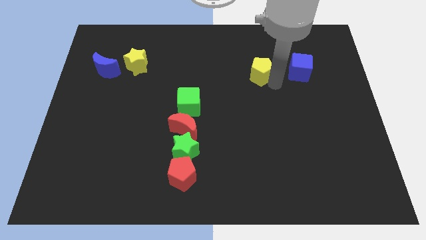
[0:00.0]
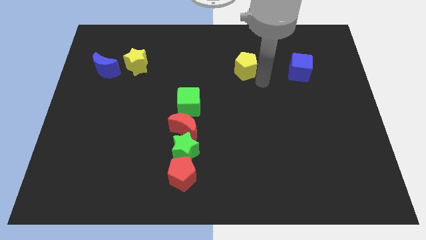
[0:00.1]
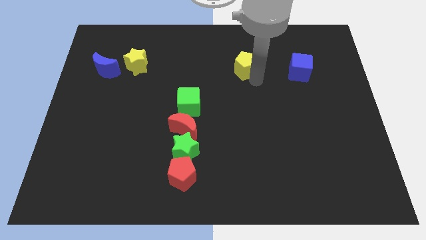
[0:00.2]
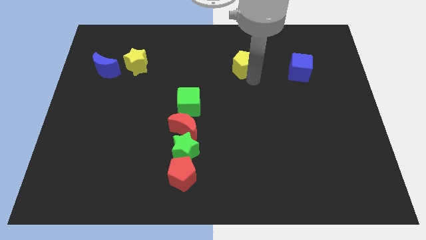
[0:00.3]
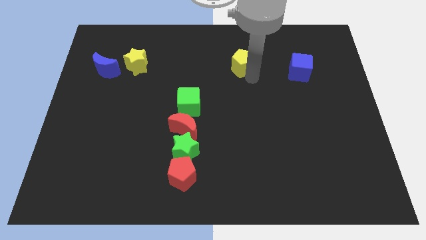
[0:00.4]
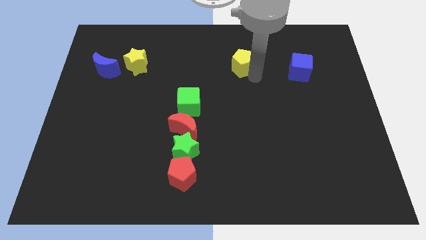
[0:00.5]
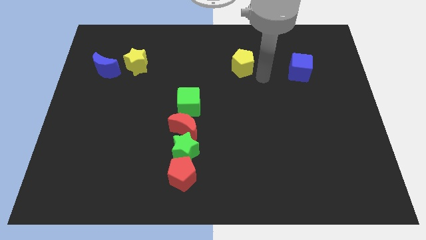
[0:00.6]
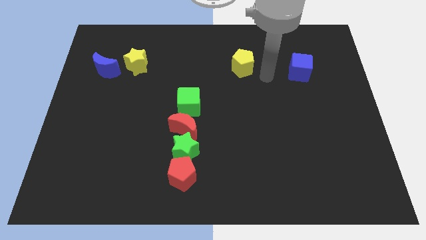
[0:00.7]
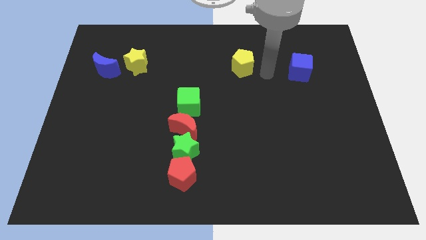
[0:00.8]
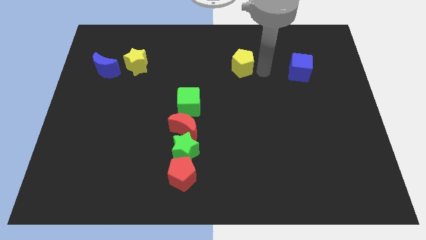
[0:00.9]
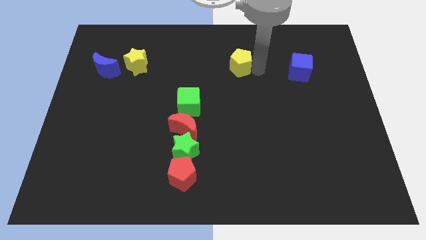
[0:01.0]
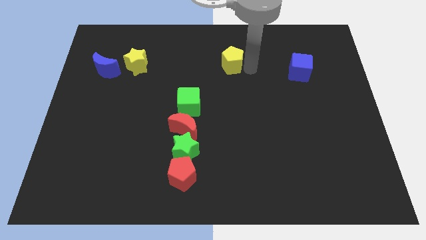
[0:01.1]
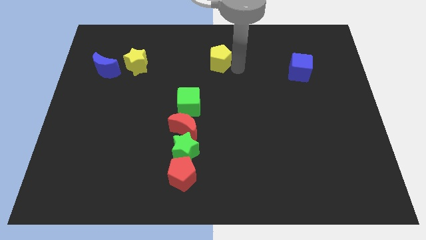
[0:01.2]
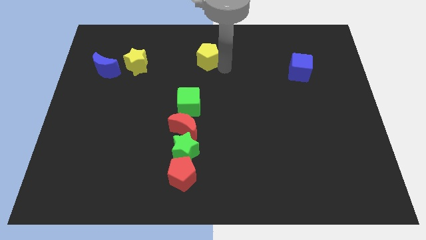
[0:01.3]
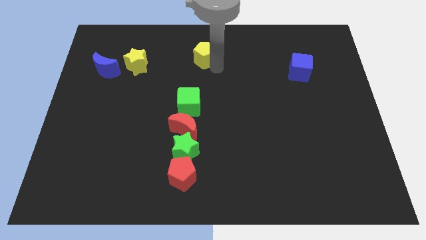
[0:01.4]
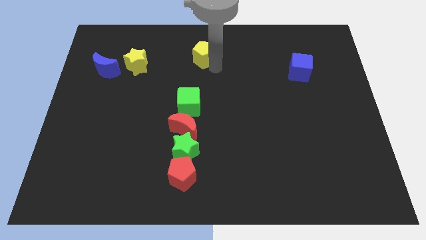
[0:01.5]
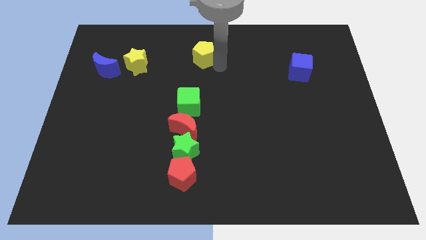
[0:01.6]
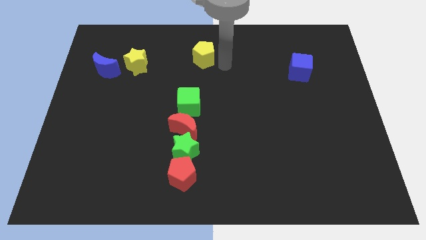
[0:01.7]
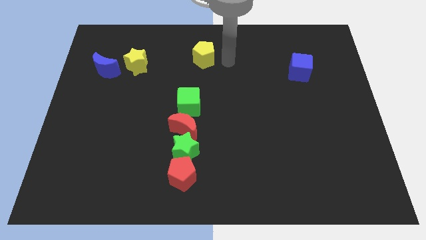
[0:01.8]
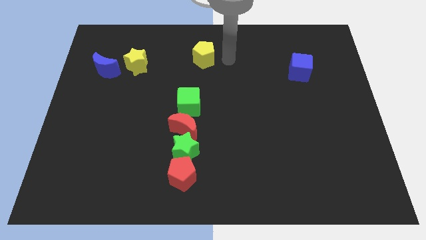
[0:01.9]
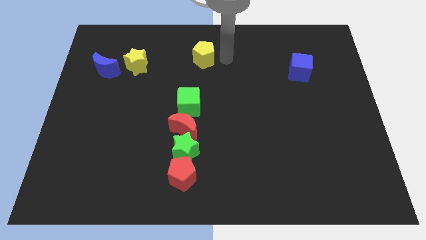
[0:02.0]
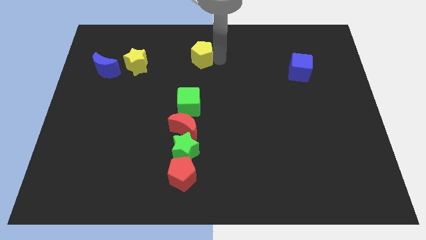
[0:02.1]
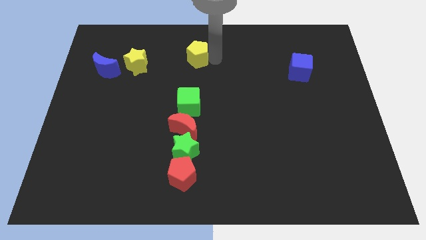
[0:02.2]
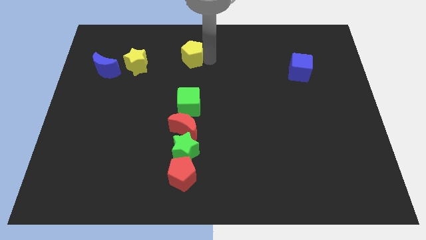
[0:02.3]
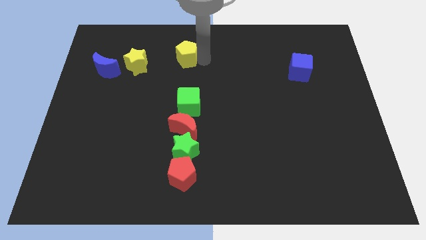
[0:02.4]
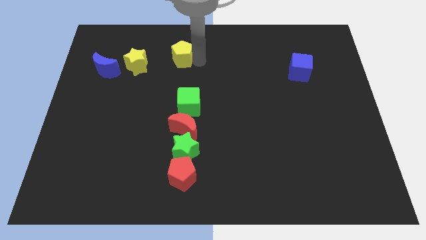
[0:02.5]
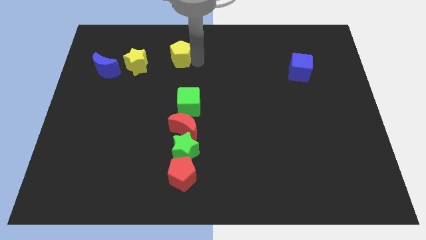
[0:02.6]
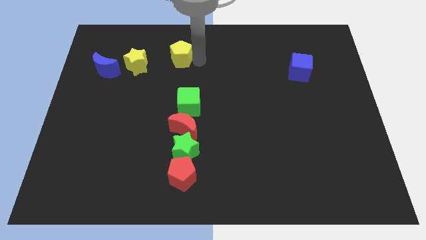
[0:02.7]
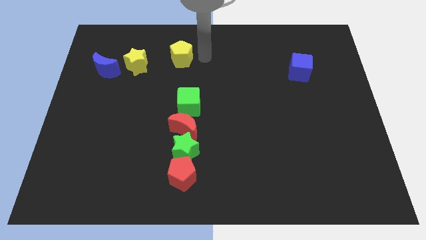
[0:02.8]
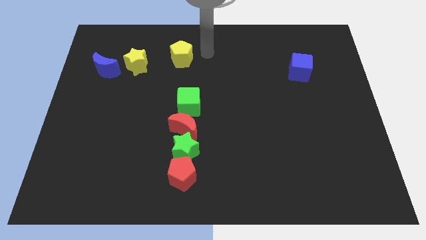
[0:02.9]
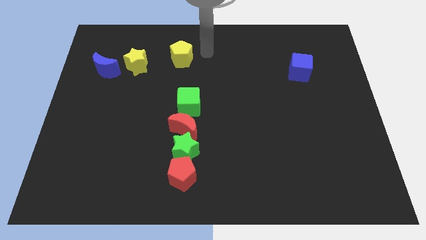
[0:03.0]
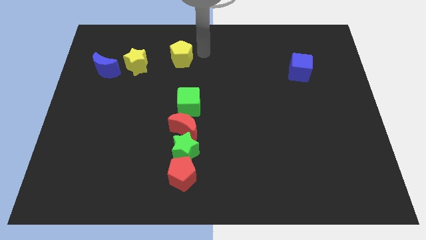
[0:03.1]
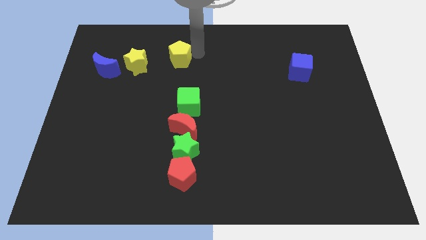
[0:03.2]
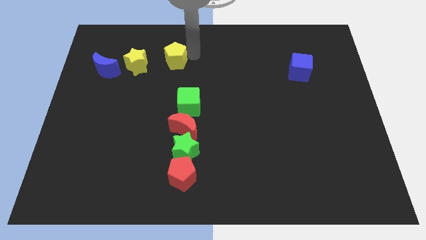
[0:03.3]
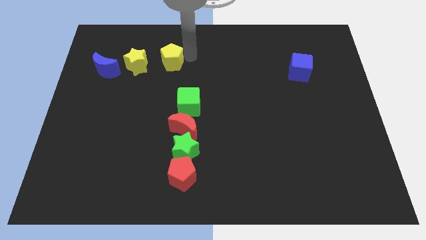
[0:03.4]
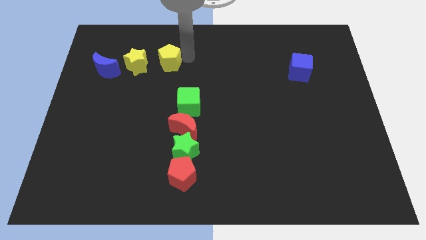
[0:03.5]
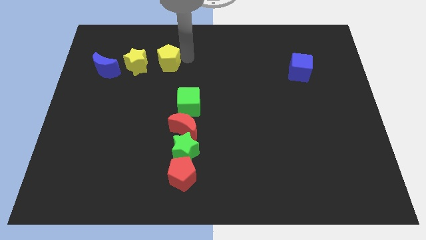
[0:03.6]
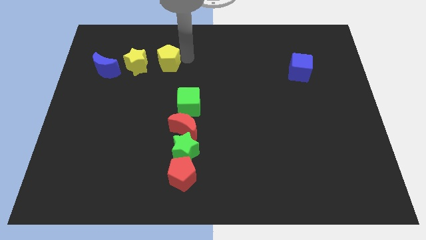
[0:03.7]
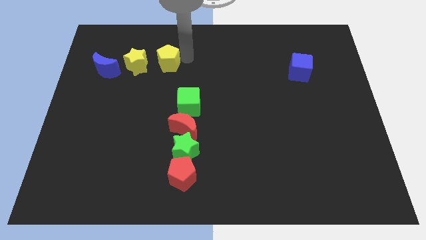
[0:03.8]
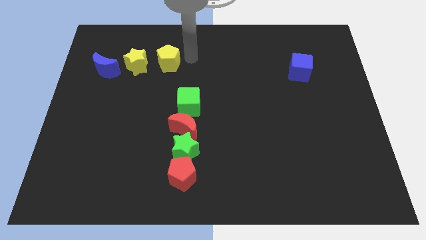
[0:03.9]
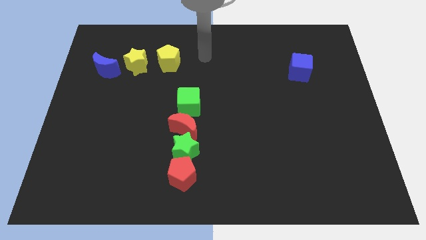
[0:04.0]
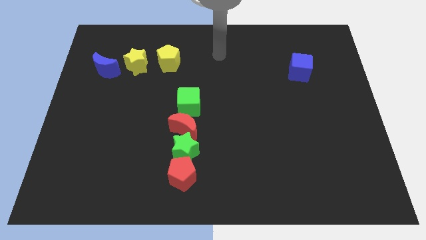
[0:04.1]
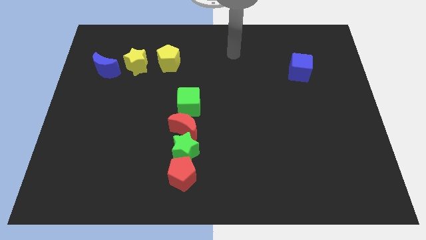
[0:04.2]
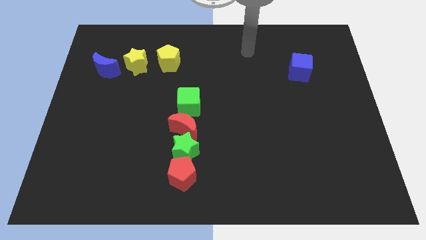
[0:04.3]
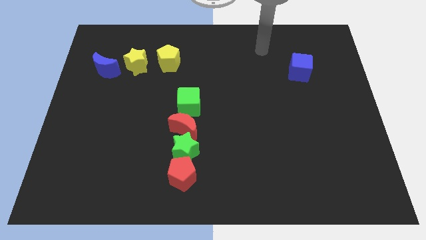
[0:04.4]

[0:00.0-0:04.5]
move yellow pentagon to the right of yellow star

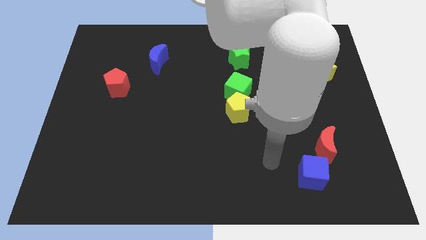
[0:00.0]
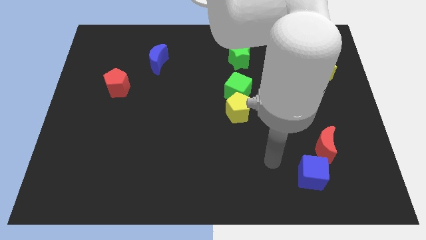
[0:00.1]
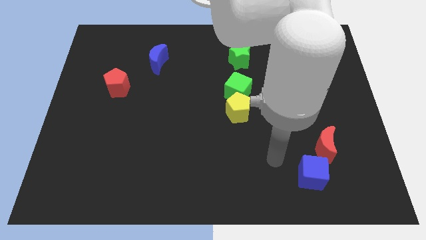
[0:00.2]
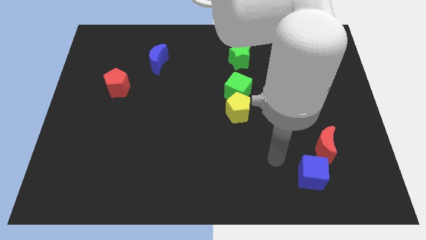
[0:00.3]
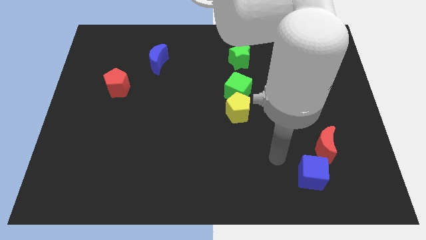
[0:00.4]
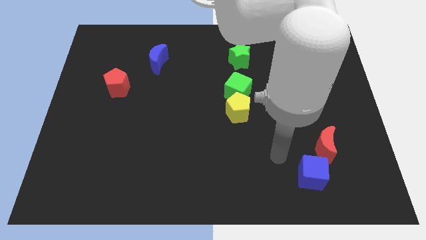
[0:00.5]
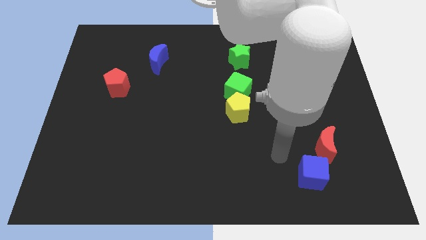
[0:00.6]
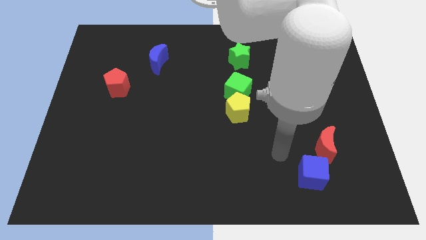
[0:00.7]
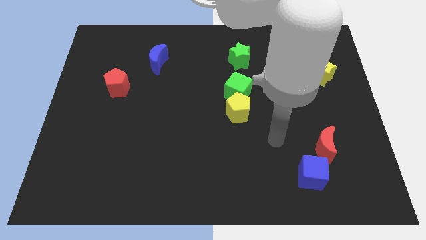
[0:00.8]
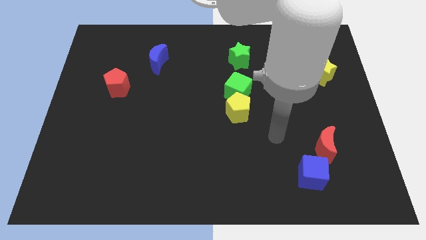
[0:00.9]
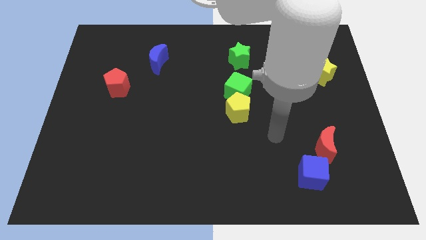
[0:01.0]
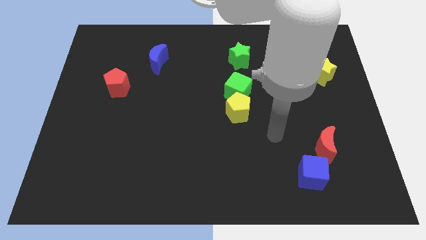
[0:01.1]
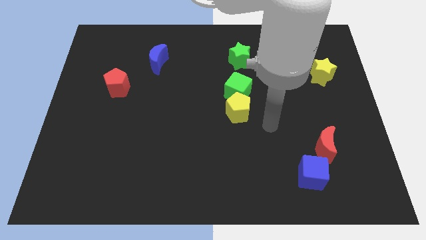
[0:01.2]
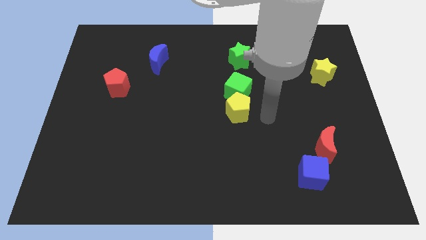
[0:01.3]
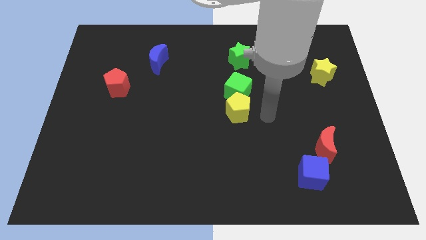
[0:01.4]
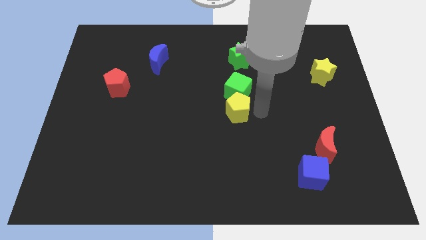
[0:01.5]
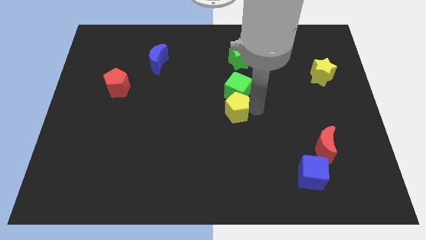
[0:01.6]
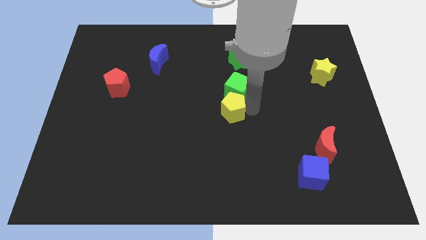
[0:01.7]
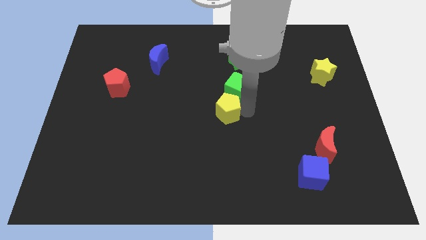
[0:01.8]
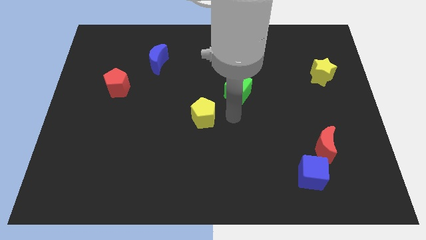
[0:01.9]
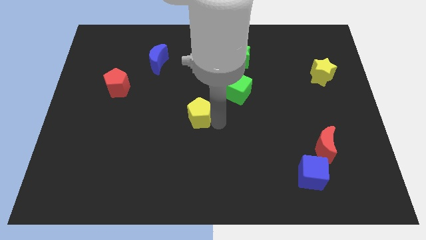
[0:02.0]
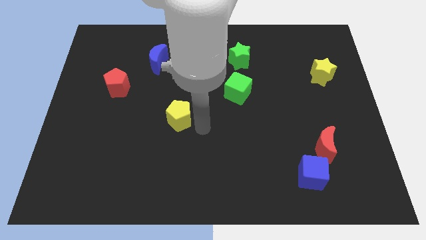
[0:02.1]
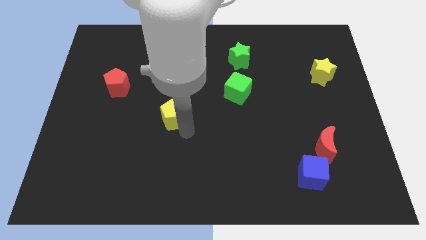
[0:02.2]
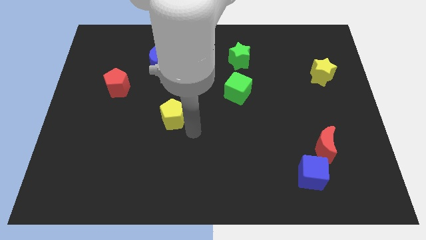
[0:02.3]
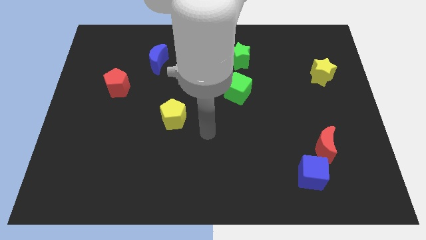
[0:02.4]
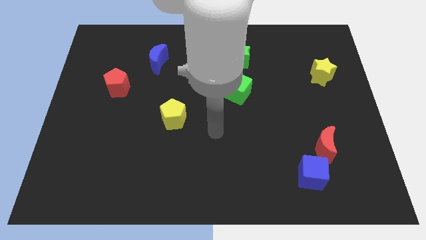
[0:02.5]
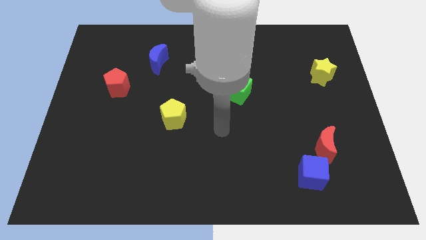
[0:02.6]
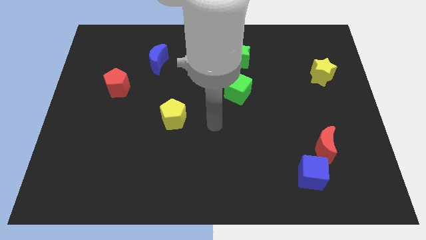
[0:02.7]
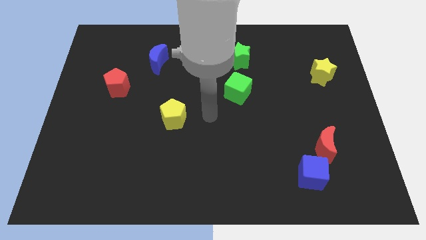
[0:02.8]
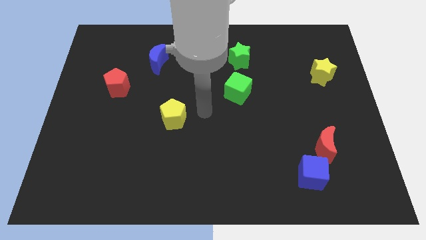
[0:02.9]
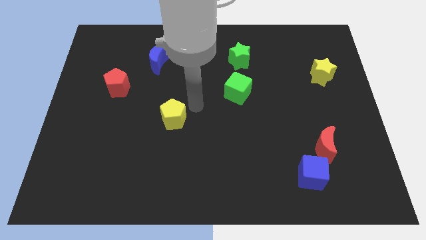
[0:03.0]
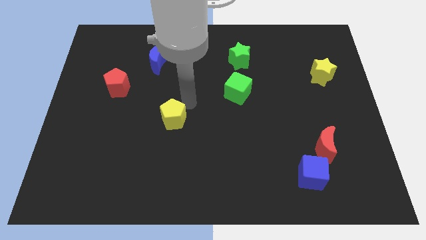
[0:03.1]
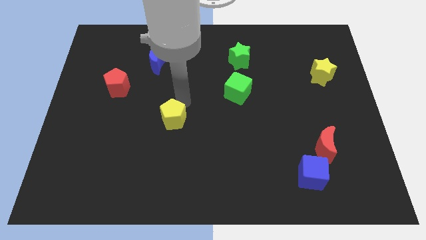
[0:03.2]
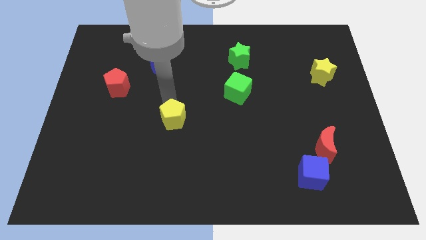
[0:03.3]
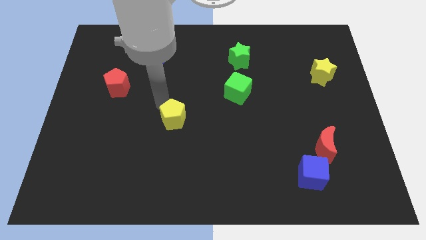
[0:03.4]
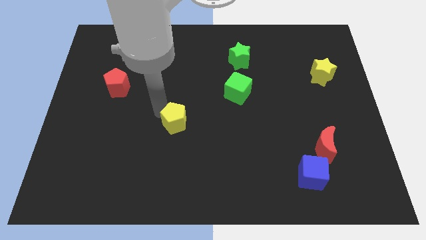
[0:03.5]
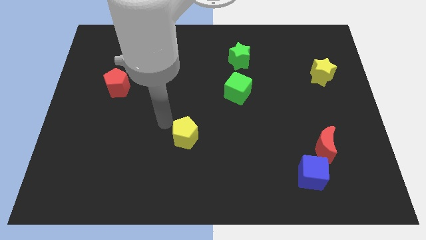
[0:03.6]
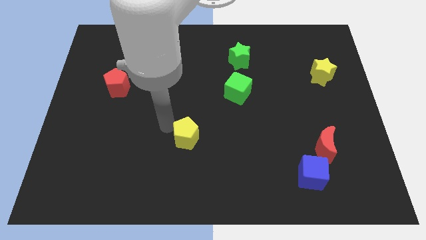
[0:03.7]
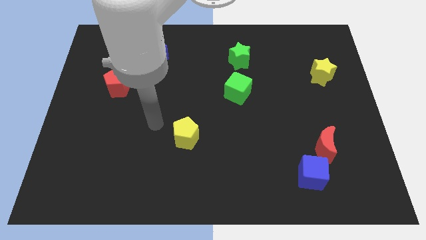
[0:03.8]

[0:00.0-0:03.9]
move the yellow pentagon diagonally to the bottom right of the red pentagon

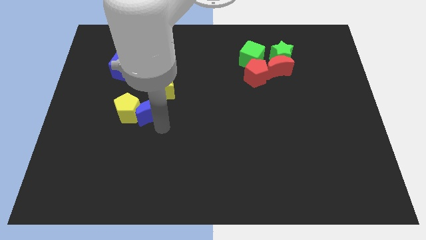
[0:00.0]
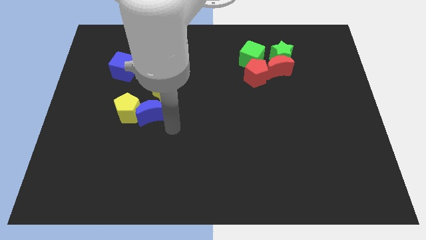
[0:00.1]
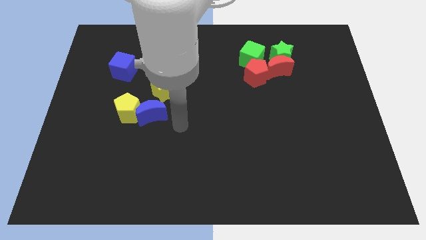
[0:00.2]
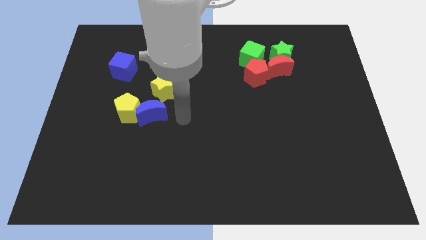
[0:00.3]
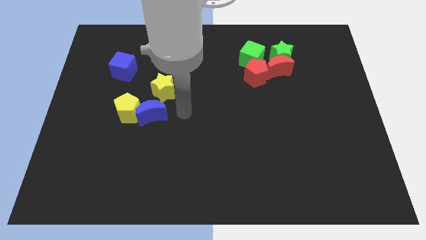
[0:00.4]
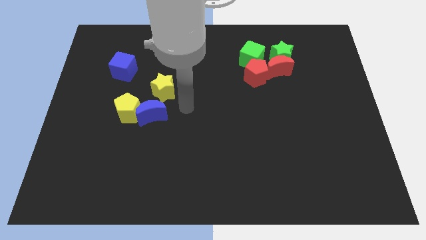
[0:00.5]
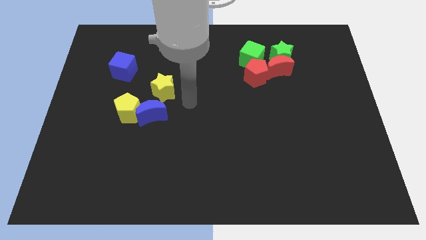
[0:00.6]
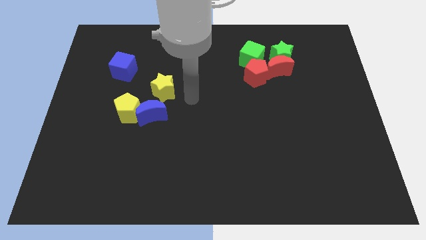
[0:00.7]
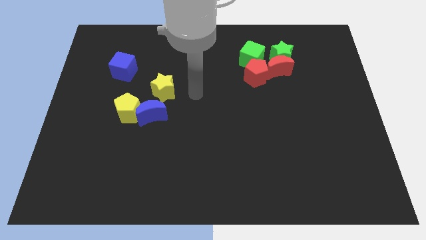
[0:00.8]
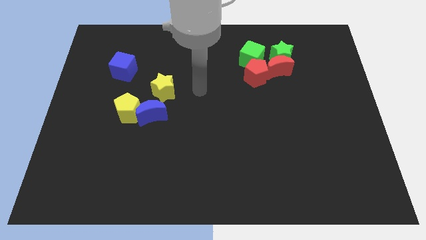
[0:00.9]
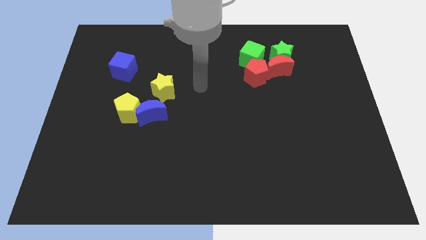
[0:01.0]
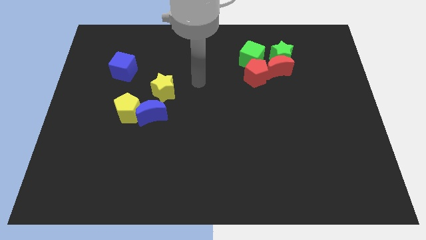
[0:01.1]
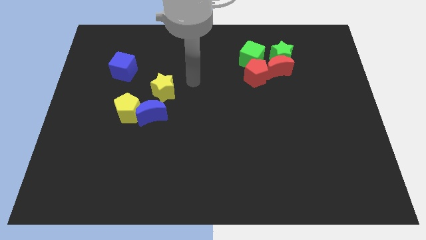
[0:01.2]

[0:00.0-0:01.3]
move the arm towards top side
